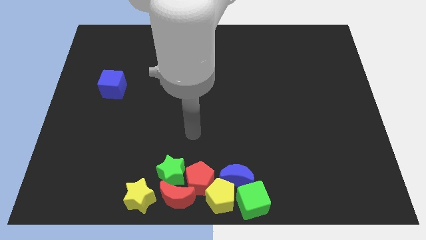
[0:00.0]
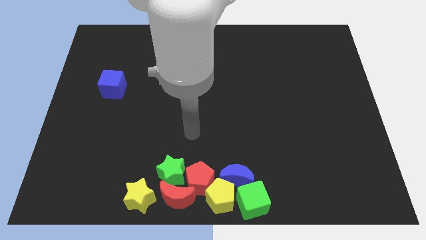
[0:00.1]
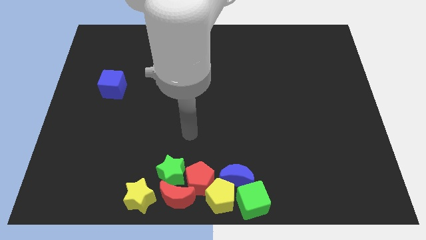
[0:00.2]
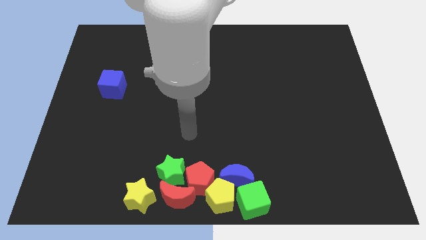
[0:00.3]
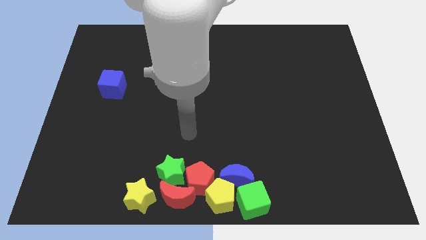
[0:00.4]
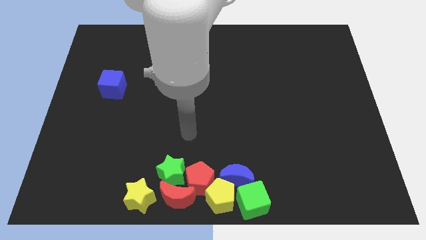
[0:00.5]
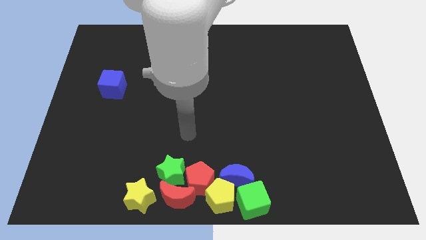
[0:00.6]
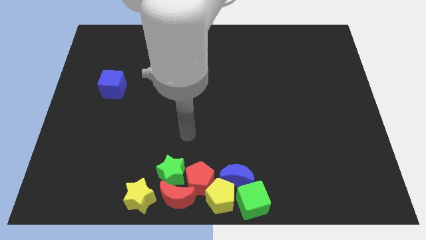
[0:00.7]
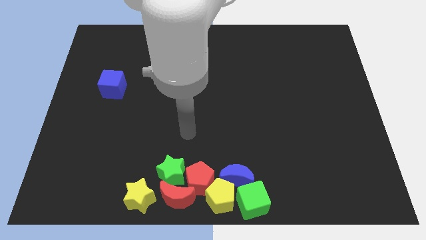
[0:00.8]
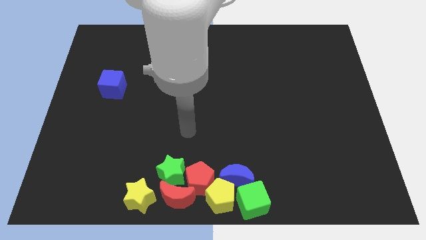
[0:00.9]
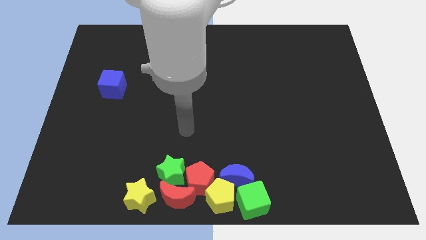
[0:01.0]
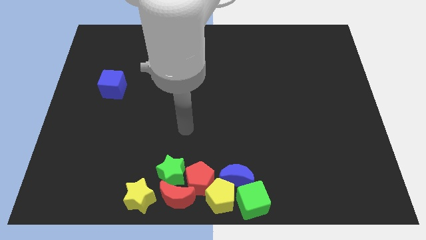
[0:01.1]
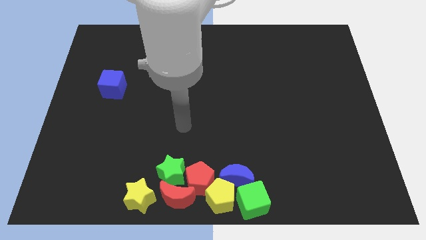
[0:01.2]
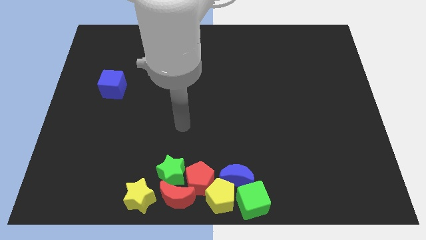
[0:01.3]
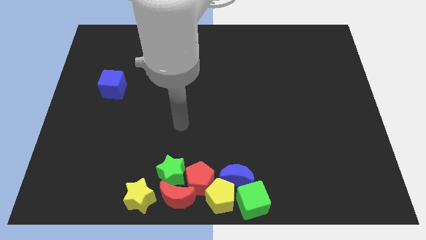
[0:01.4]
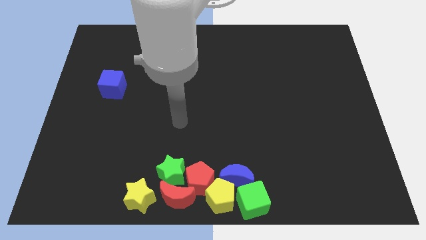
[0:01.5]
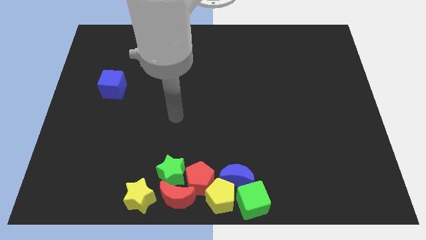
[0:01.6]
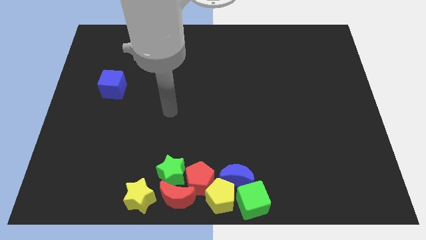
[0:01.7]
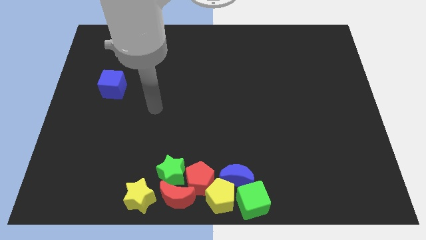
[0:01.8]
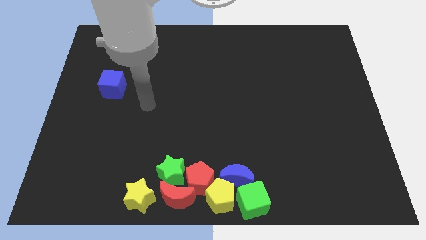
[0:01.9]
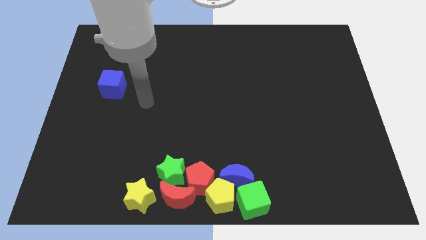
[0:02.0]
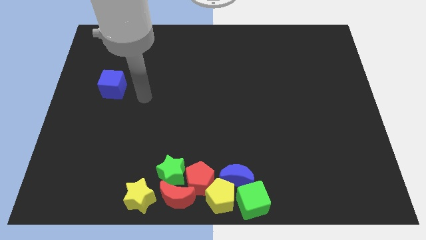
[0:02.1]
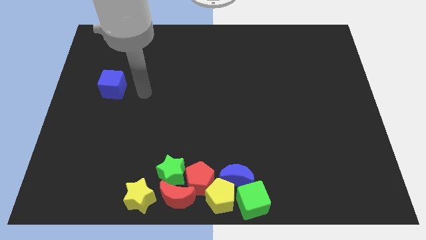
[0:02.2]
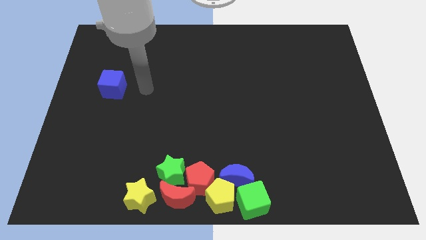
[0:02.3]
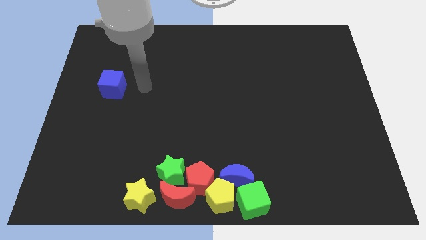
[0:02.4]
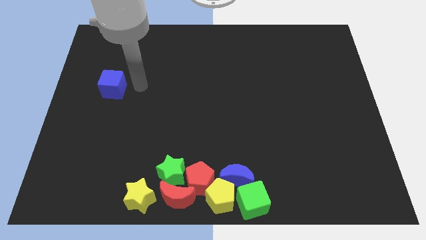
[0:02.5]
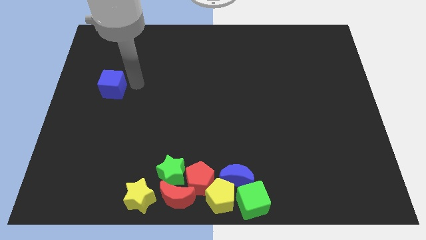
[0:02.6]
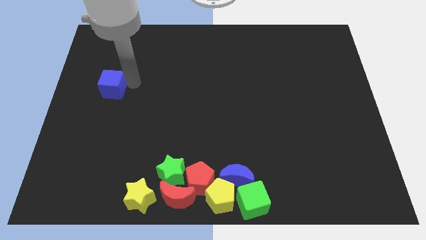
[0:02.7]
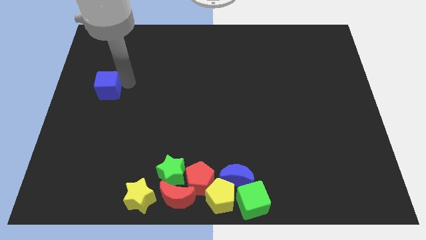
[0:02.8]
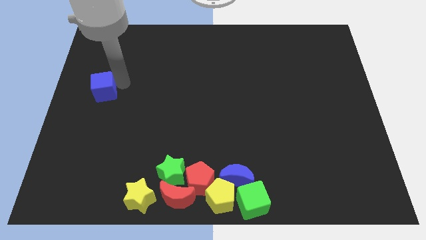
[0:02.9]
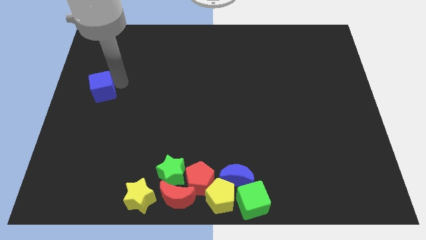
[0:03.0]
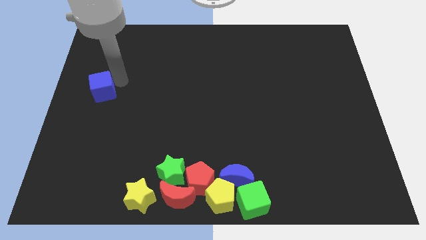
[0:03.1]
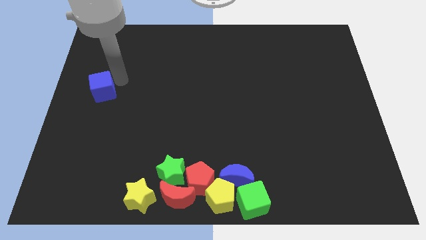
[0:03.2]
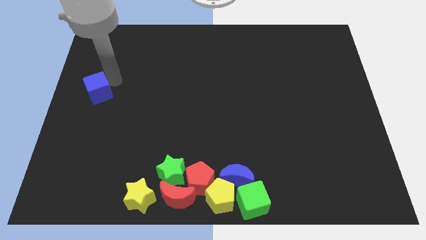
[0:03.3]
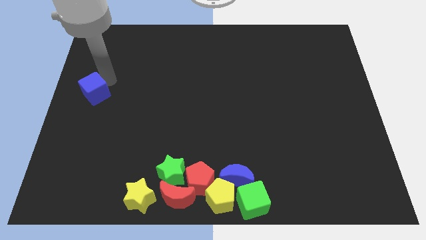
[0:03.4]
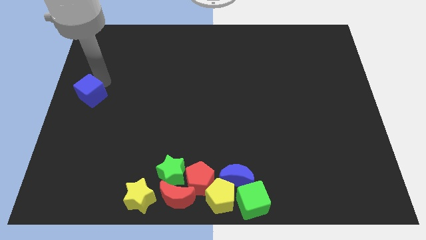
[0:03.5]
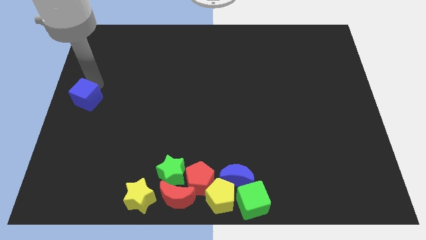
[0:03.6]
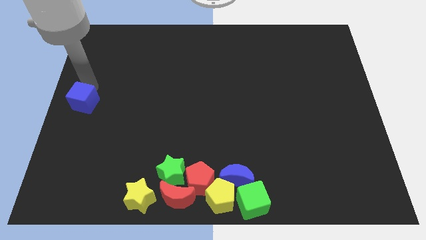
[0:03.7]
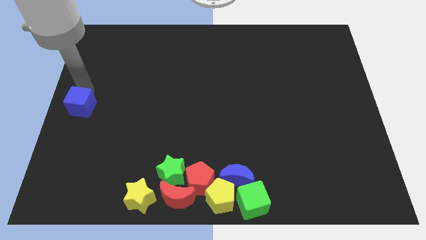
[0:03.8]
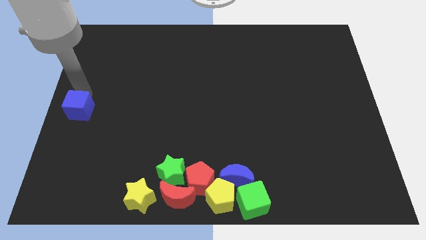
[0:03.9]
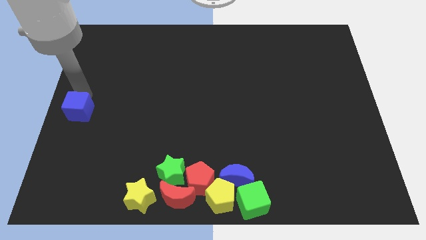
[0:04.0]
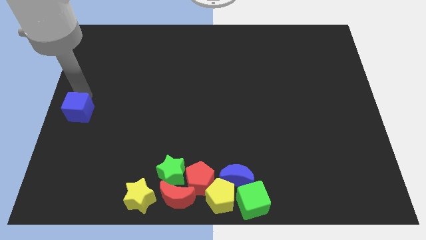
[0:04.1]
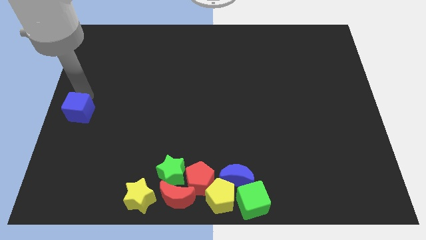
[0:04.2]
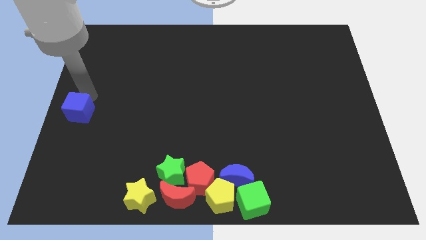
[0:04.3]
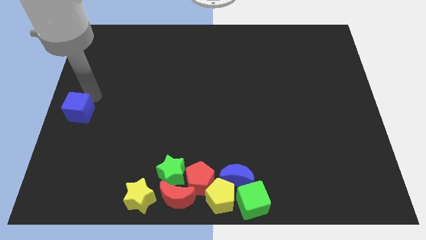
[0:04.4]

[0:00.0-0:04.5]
move the blue cube to the center left of the board

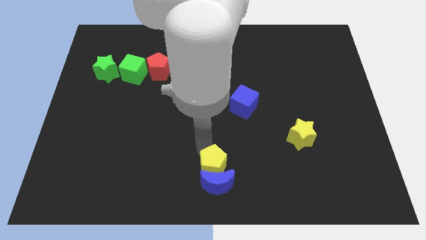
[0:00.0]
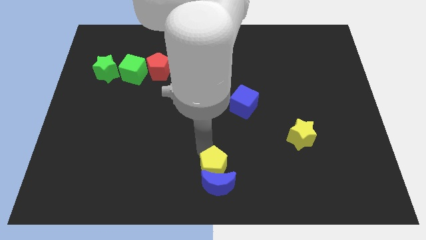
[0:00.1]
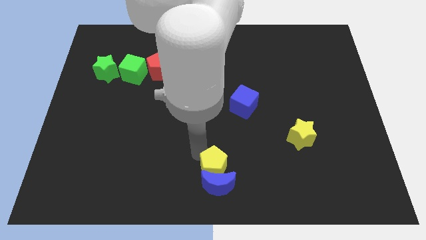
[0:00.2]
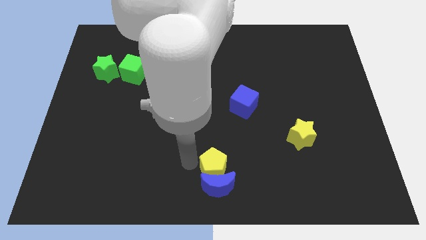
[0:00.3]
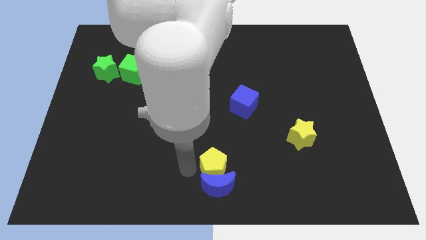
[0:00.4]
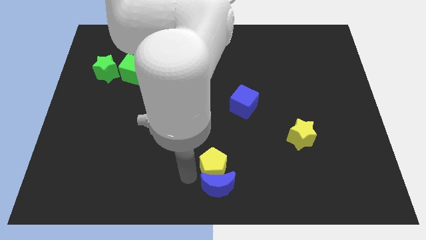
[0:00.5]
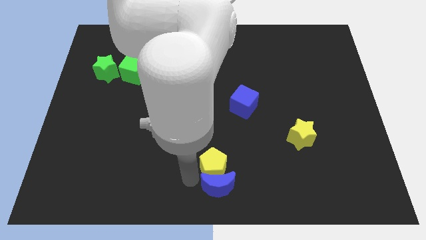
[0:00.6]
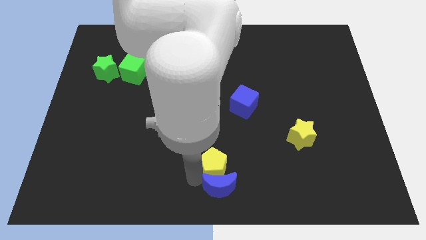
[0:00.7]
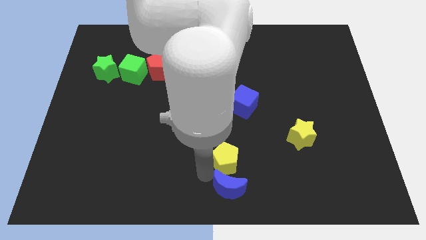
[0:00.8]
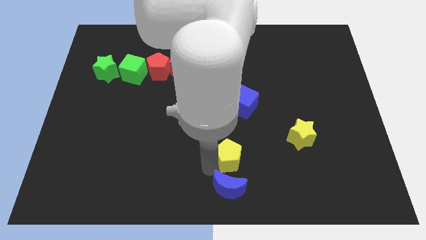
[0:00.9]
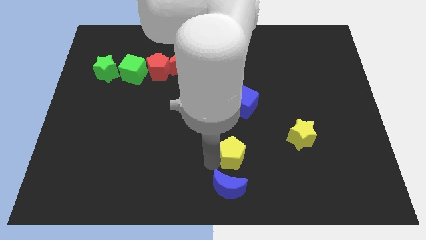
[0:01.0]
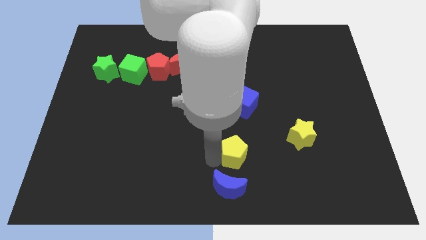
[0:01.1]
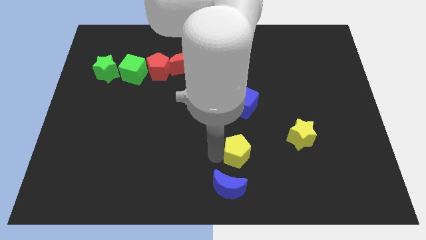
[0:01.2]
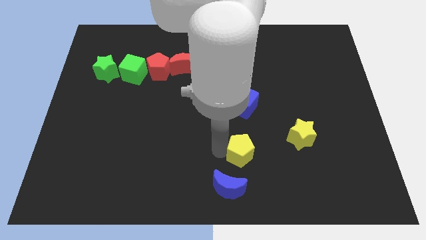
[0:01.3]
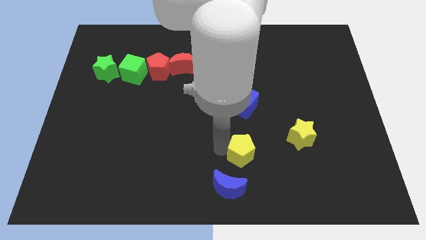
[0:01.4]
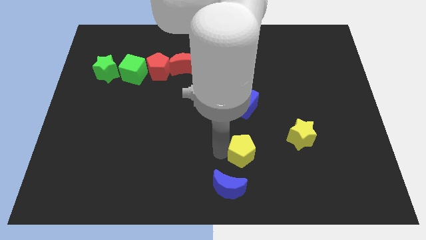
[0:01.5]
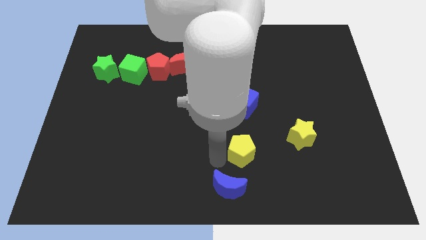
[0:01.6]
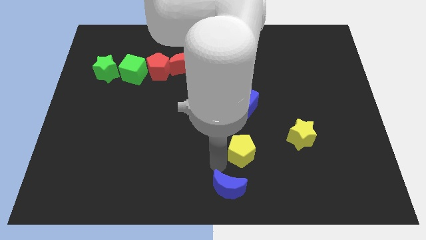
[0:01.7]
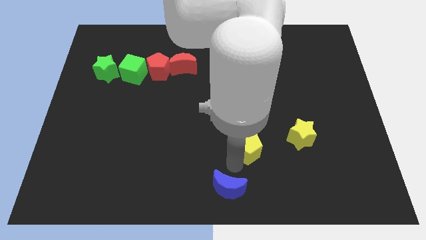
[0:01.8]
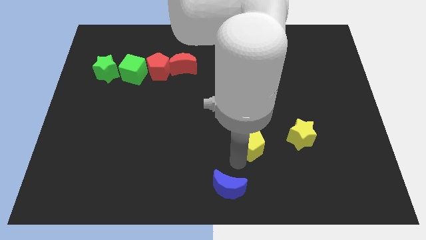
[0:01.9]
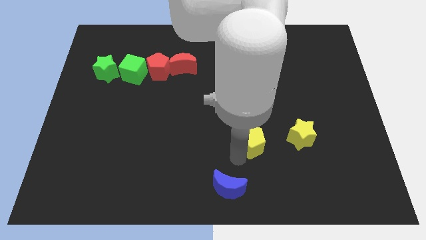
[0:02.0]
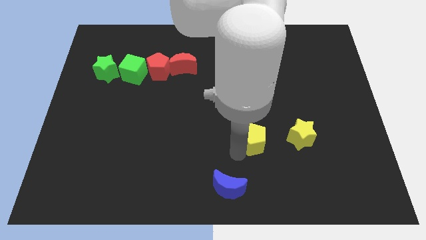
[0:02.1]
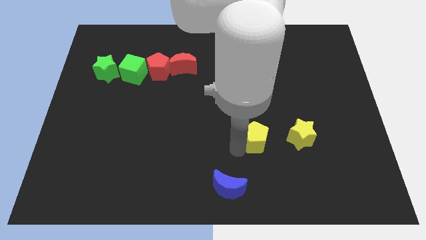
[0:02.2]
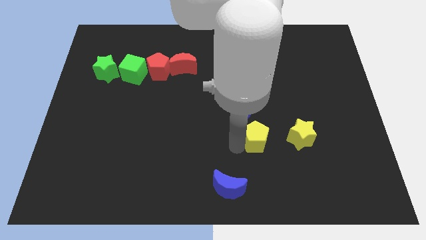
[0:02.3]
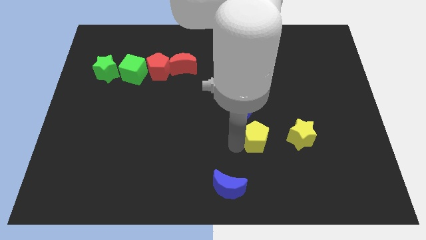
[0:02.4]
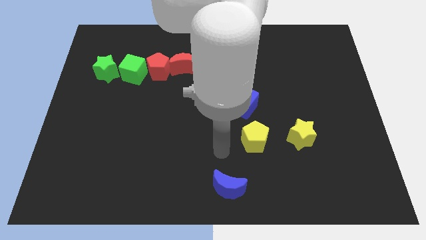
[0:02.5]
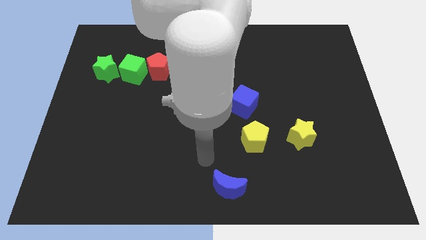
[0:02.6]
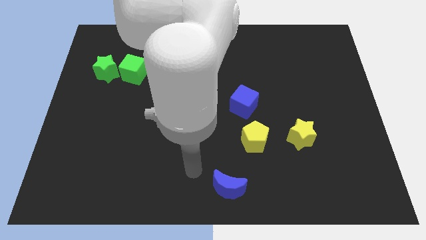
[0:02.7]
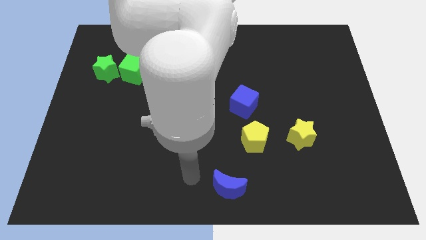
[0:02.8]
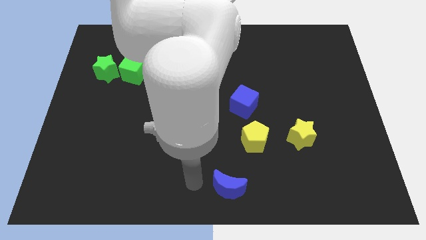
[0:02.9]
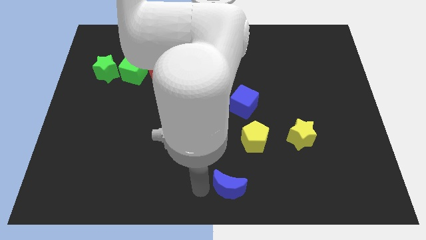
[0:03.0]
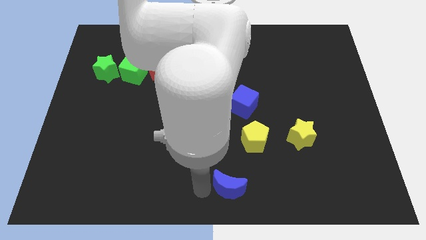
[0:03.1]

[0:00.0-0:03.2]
move the yellow pentagon under blue cube

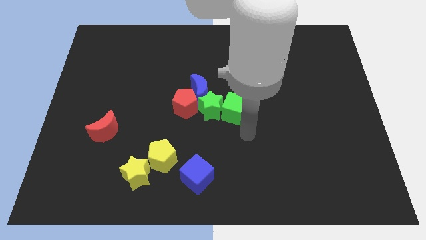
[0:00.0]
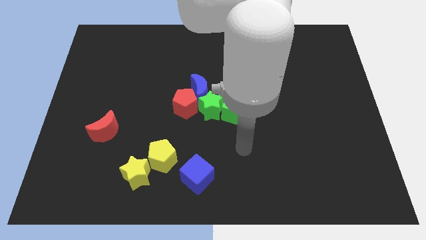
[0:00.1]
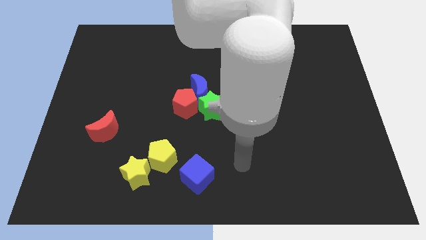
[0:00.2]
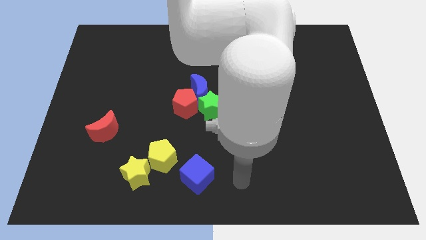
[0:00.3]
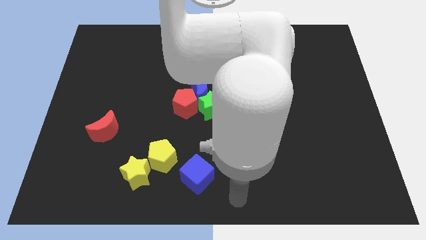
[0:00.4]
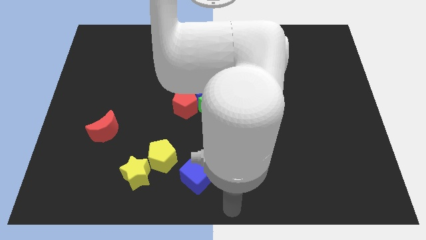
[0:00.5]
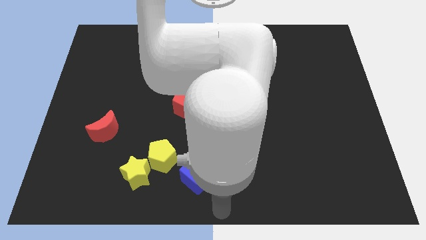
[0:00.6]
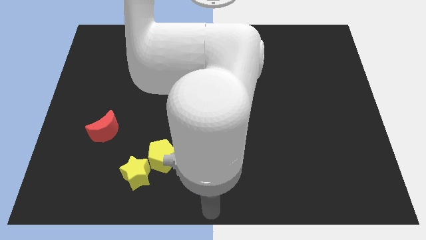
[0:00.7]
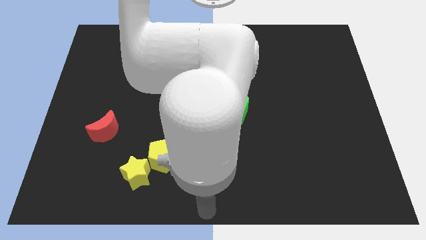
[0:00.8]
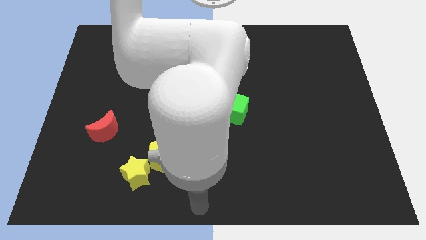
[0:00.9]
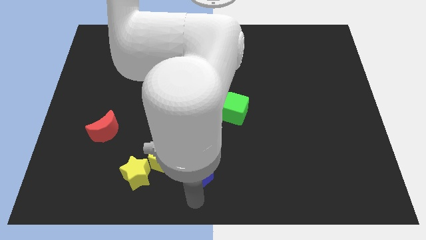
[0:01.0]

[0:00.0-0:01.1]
place your arm at the bottom of the blue cube

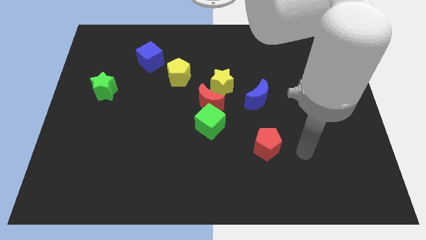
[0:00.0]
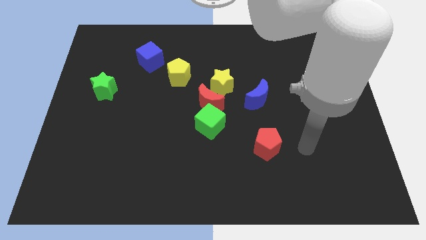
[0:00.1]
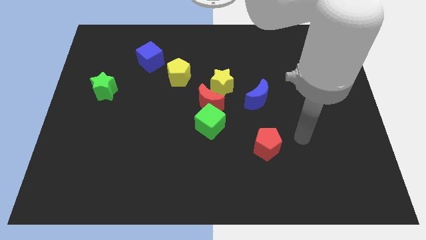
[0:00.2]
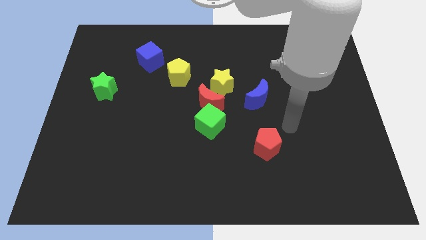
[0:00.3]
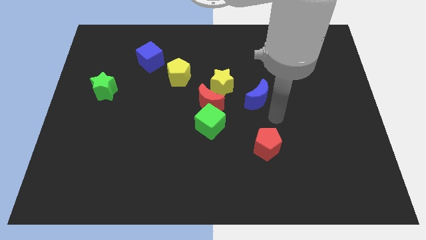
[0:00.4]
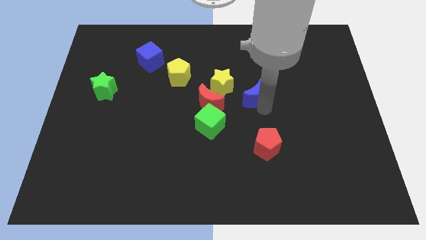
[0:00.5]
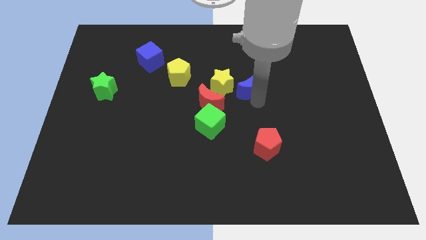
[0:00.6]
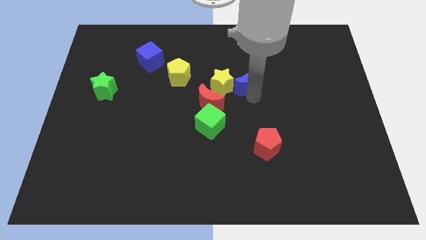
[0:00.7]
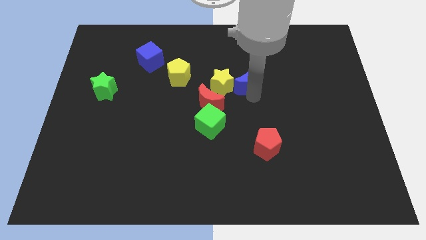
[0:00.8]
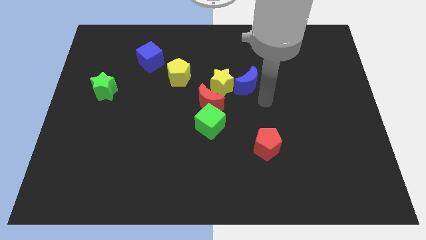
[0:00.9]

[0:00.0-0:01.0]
place the blue moon right to the yellow star
